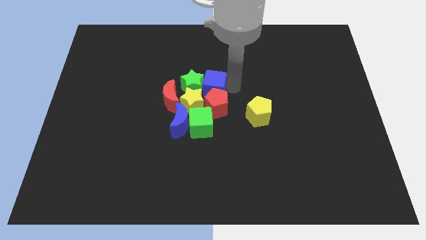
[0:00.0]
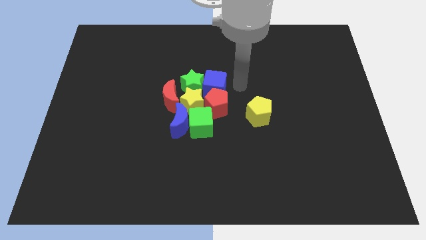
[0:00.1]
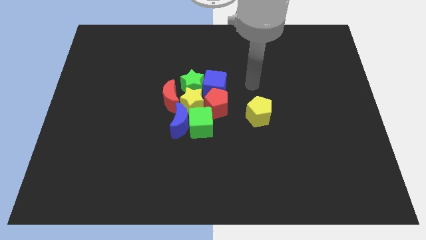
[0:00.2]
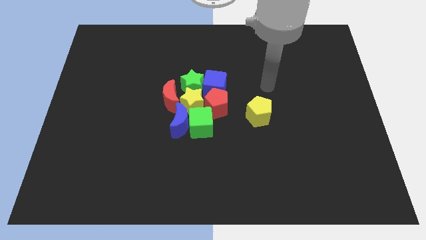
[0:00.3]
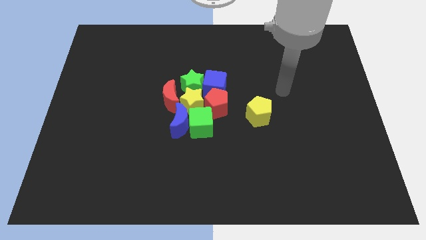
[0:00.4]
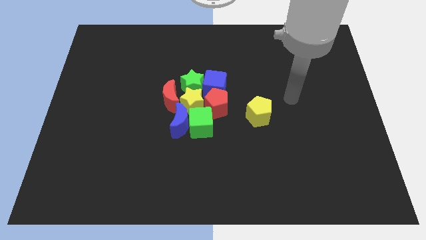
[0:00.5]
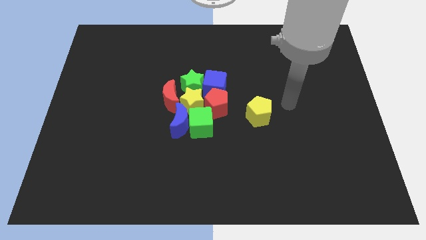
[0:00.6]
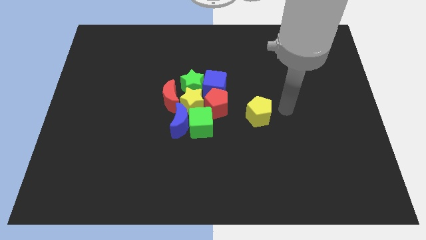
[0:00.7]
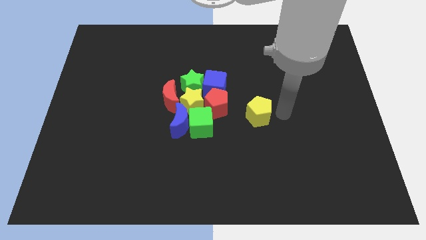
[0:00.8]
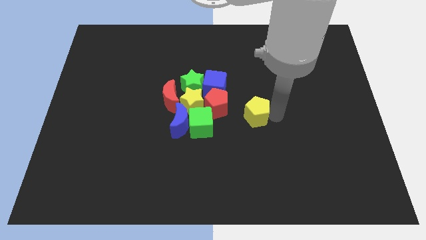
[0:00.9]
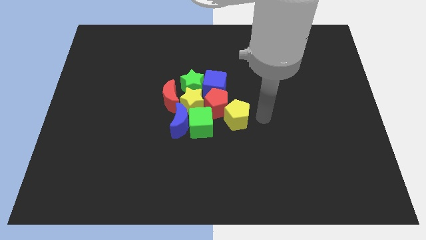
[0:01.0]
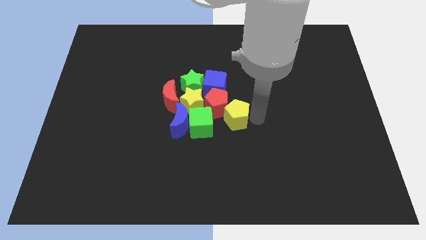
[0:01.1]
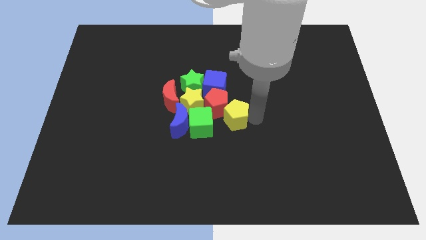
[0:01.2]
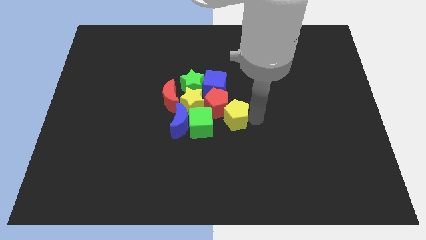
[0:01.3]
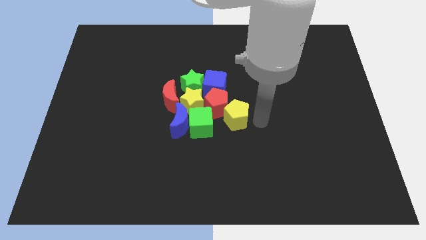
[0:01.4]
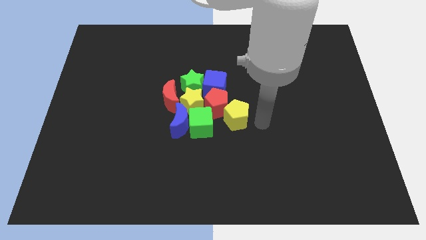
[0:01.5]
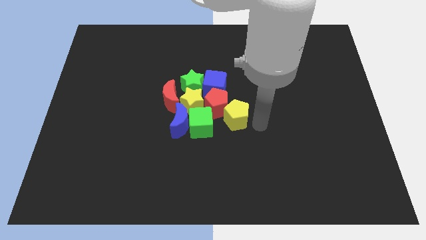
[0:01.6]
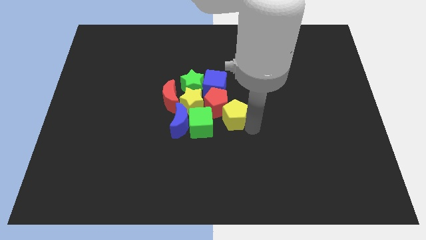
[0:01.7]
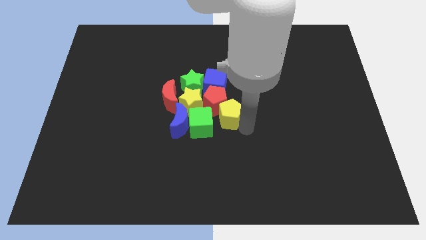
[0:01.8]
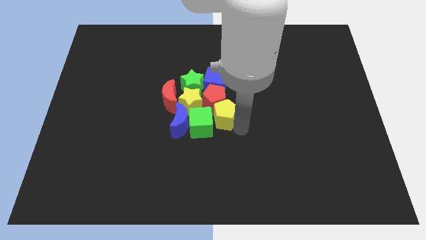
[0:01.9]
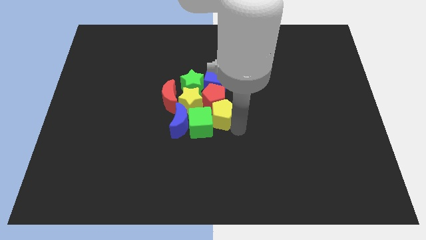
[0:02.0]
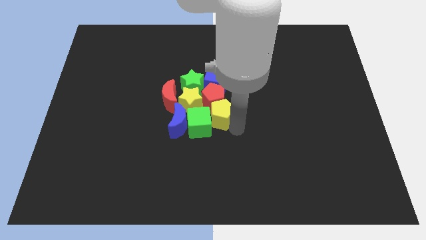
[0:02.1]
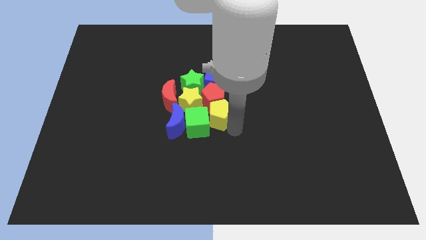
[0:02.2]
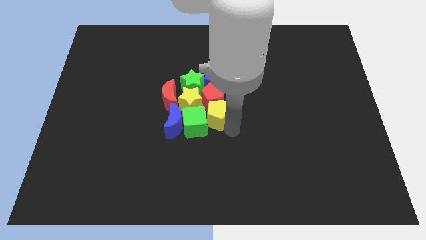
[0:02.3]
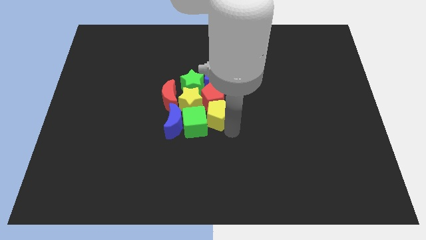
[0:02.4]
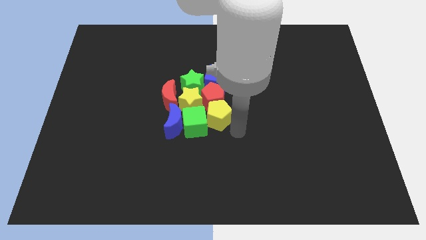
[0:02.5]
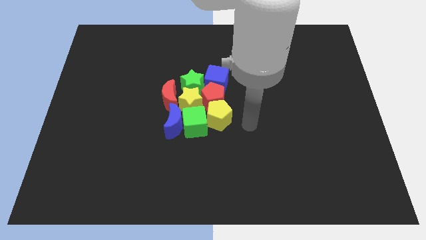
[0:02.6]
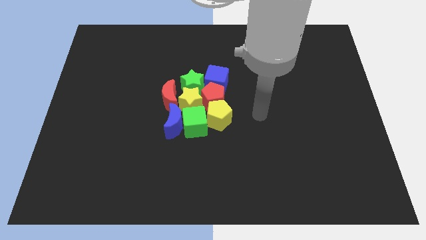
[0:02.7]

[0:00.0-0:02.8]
push the yellow pentagon into the group of blocks

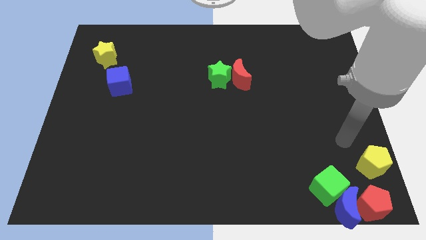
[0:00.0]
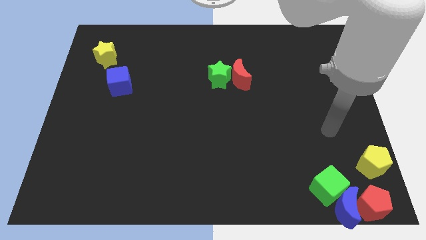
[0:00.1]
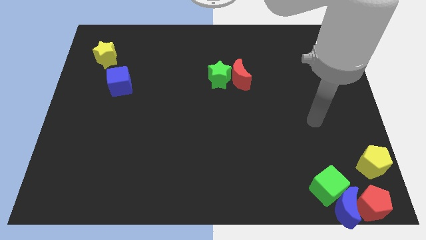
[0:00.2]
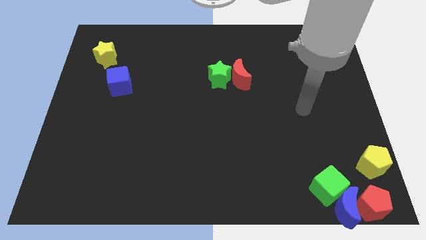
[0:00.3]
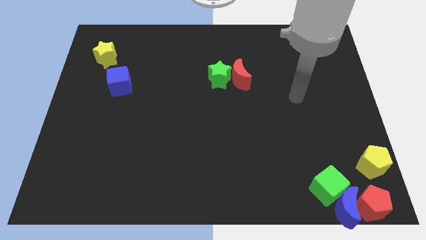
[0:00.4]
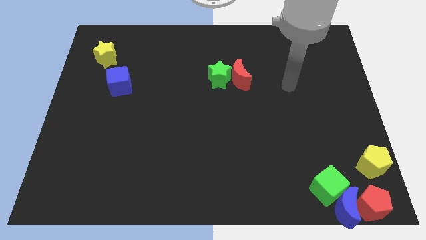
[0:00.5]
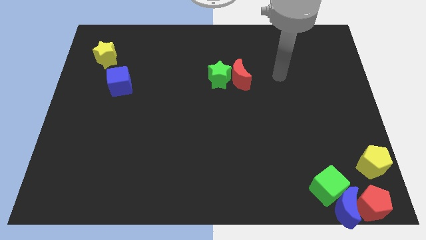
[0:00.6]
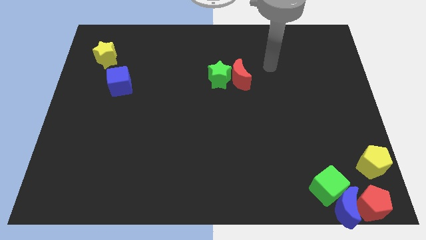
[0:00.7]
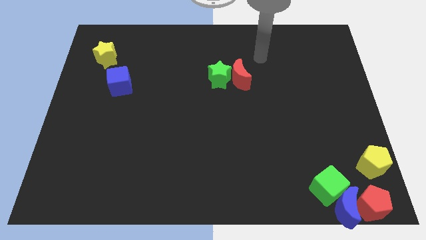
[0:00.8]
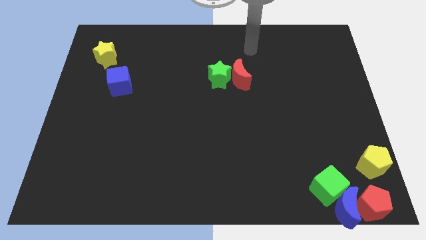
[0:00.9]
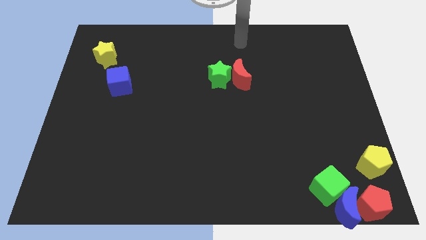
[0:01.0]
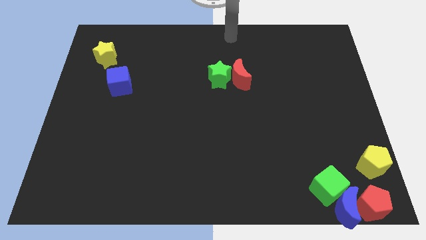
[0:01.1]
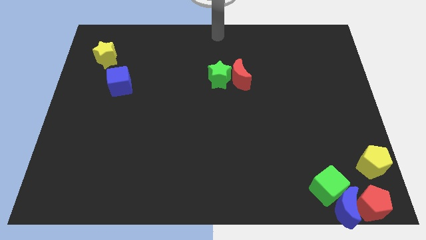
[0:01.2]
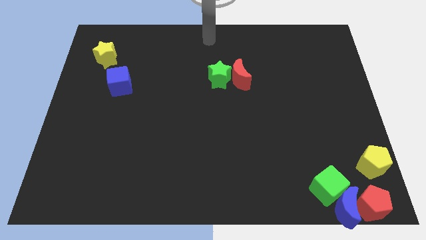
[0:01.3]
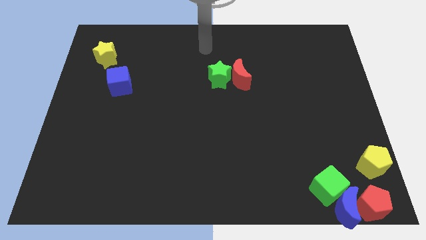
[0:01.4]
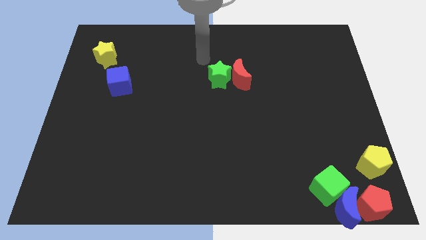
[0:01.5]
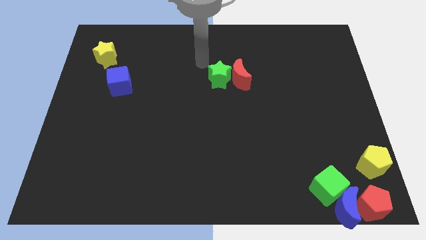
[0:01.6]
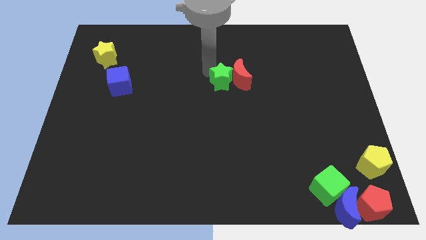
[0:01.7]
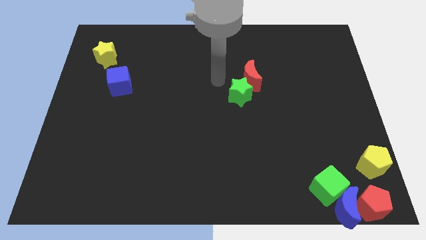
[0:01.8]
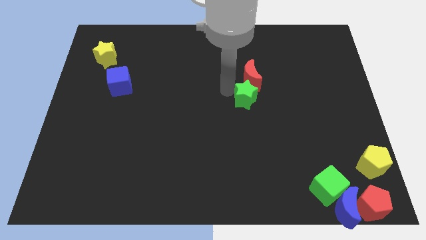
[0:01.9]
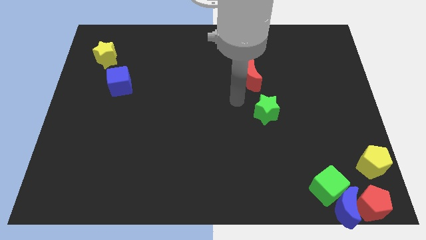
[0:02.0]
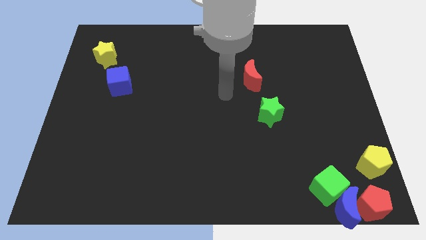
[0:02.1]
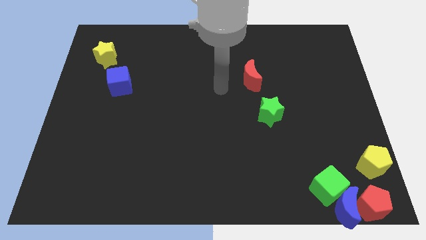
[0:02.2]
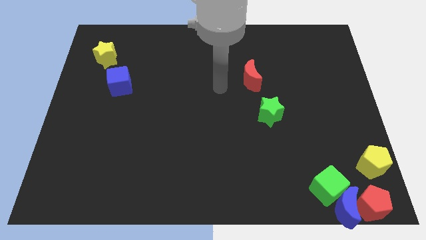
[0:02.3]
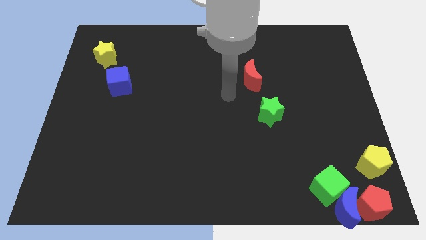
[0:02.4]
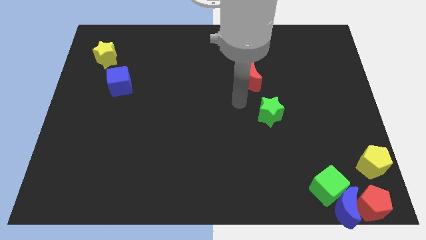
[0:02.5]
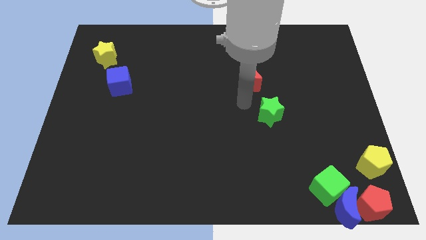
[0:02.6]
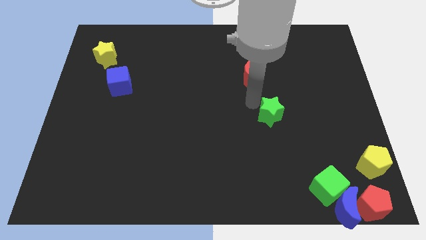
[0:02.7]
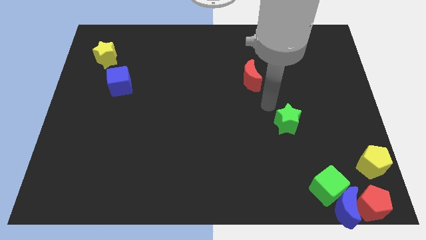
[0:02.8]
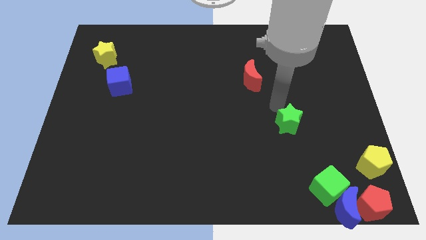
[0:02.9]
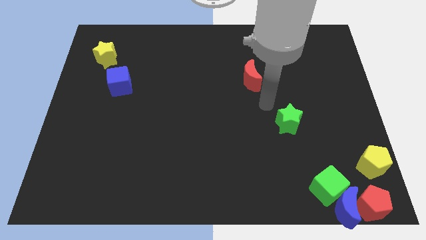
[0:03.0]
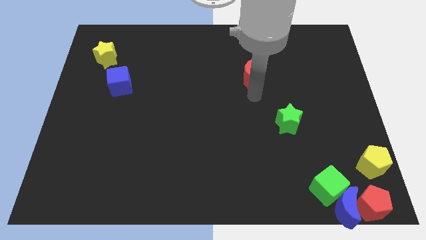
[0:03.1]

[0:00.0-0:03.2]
move the green star to the bottom right of the red crescent

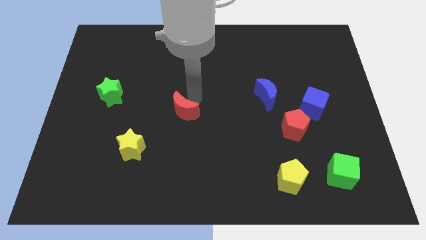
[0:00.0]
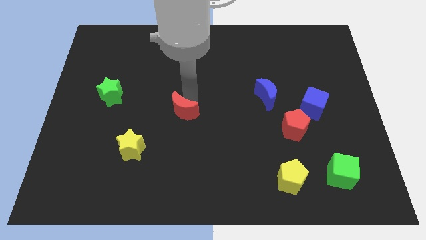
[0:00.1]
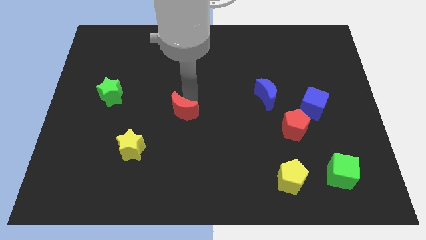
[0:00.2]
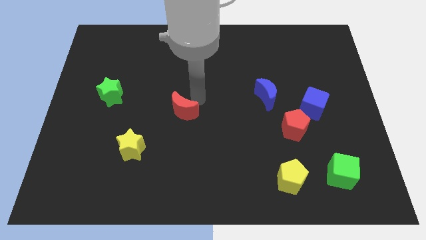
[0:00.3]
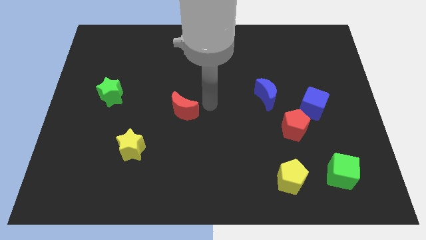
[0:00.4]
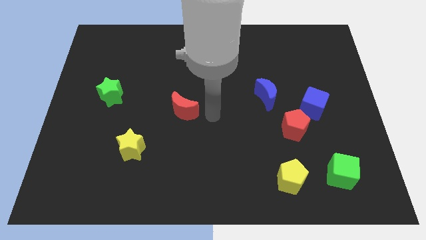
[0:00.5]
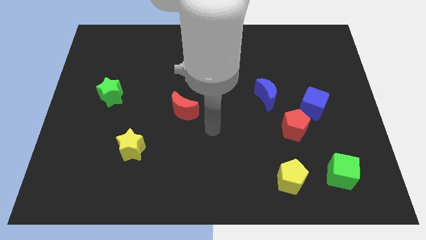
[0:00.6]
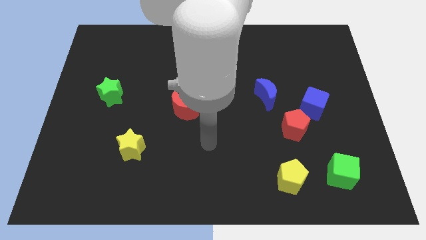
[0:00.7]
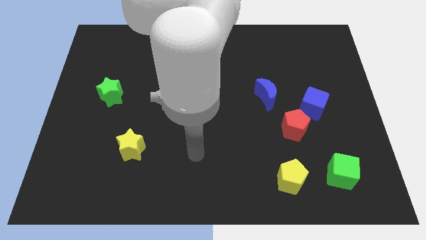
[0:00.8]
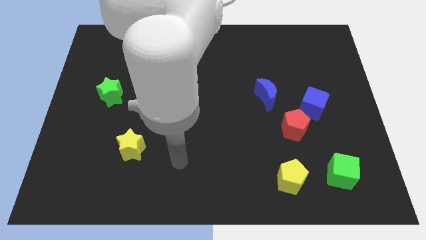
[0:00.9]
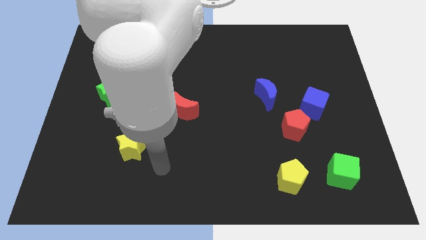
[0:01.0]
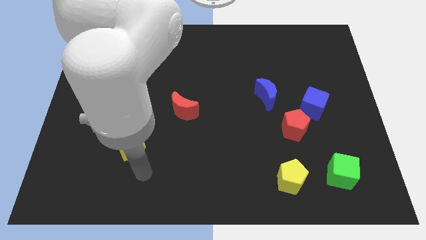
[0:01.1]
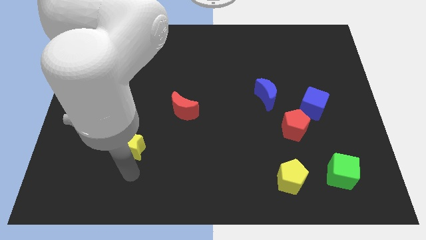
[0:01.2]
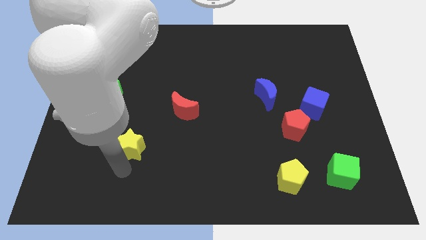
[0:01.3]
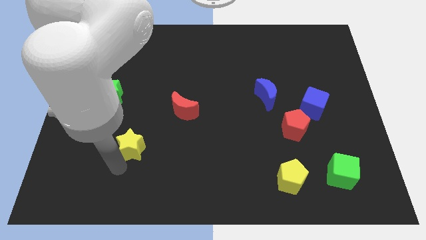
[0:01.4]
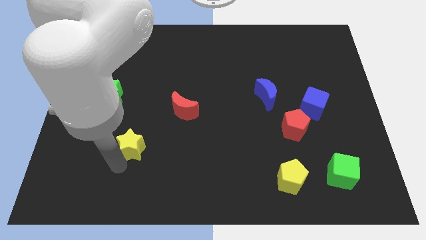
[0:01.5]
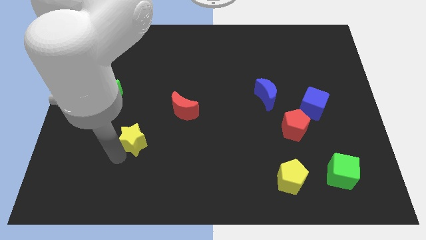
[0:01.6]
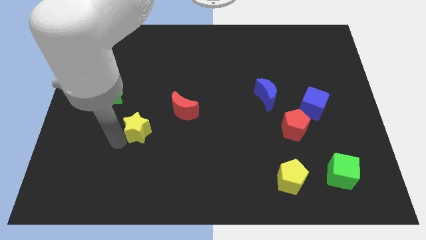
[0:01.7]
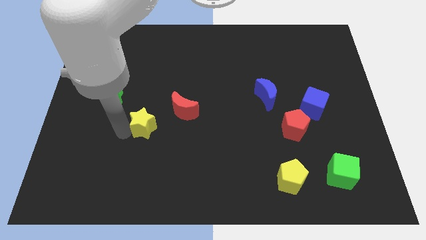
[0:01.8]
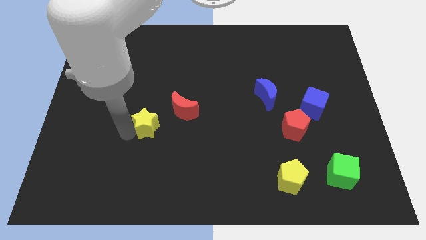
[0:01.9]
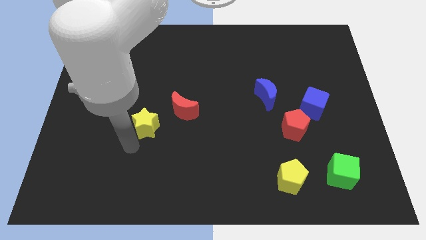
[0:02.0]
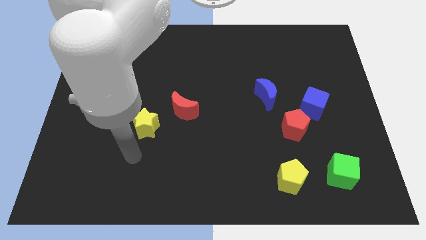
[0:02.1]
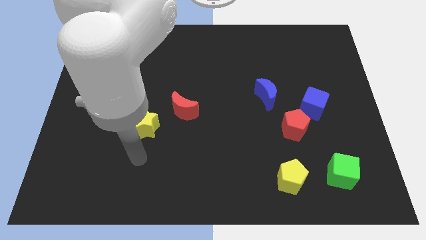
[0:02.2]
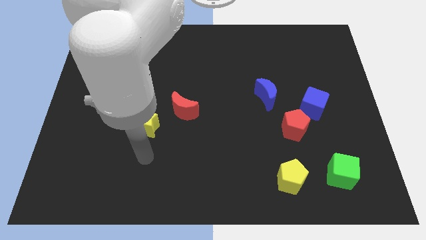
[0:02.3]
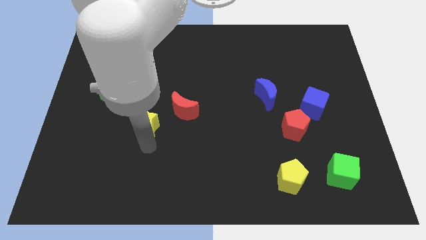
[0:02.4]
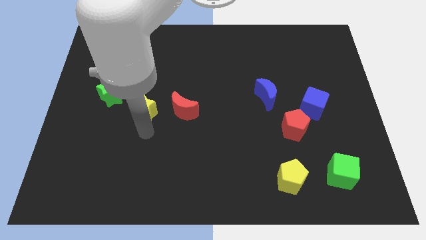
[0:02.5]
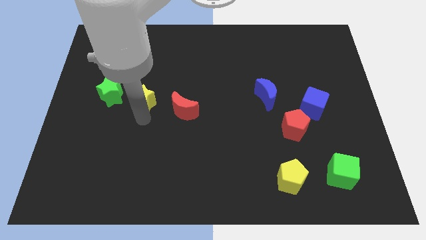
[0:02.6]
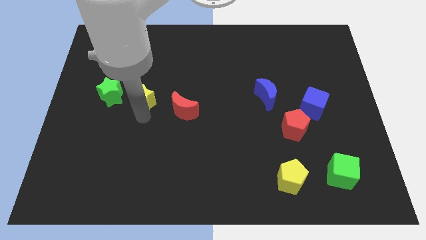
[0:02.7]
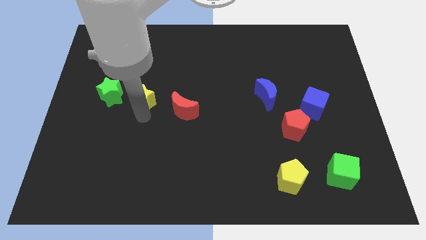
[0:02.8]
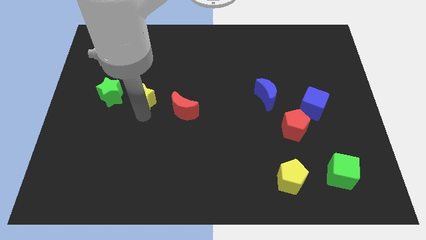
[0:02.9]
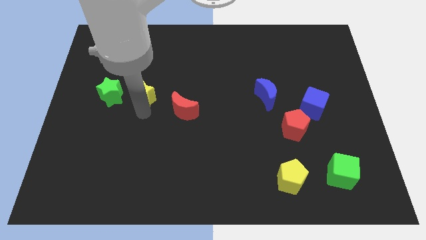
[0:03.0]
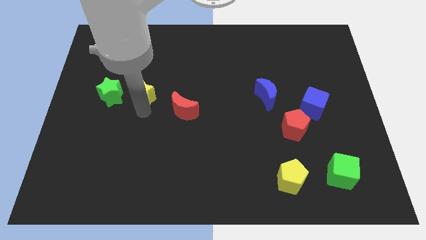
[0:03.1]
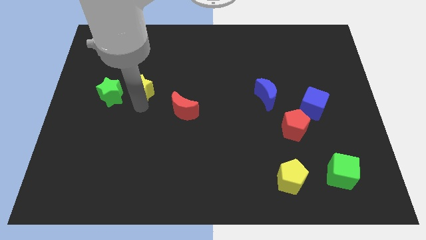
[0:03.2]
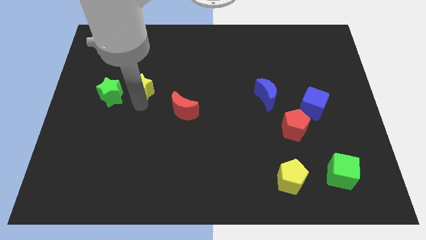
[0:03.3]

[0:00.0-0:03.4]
move yellow star to the right of green star
